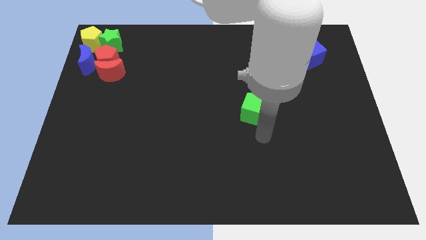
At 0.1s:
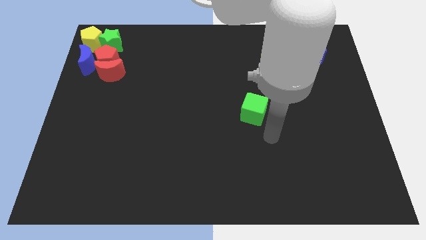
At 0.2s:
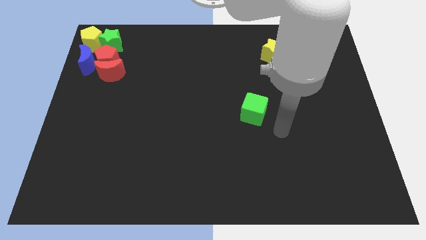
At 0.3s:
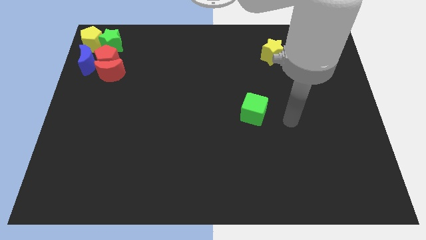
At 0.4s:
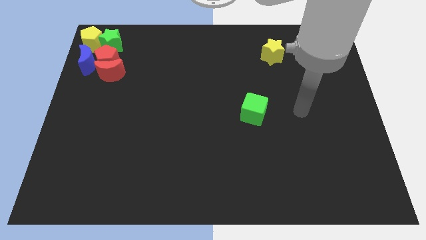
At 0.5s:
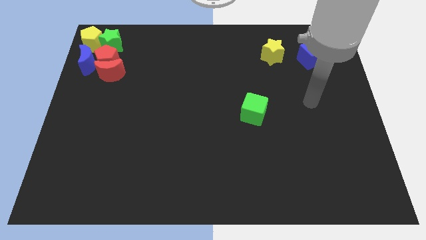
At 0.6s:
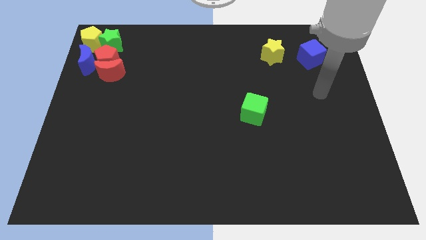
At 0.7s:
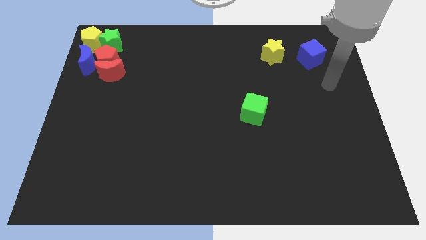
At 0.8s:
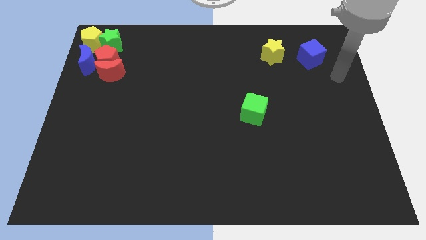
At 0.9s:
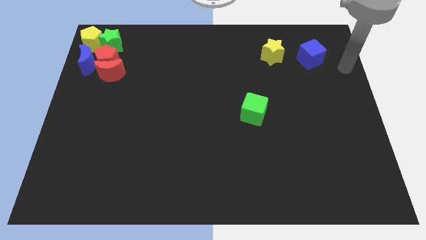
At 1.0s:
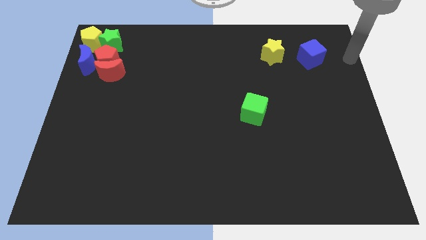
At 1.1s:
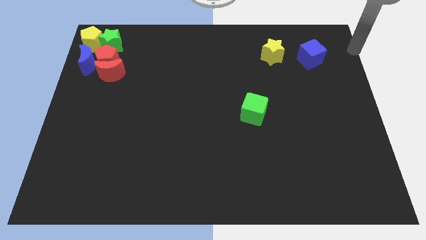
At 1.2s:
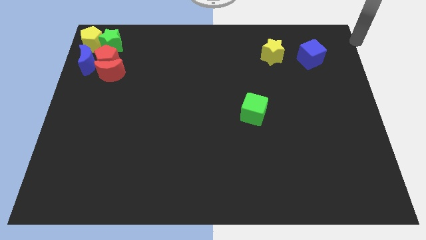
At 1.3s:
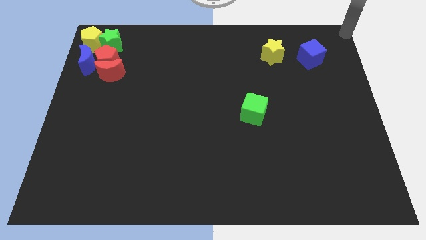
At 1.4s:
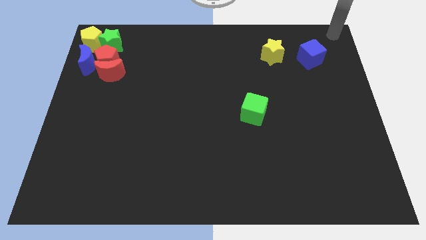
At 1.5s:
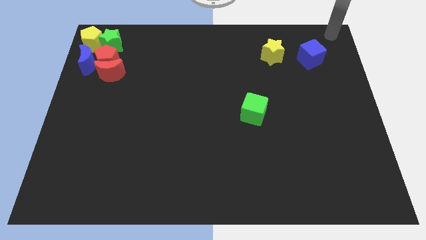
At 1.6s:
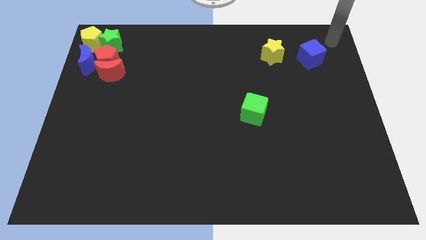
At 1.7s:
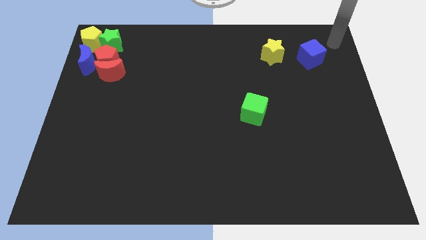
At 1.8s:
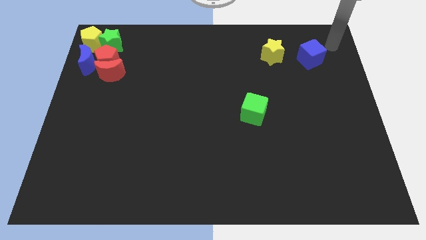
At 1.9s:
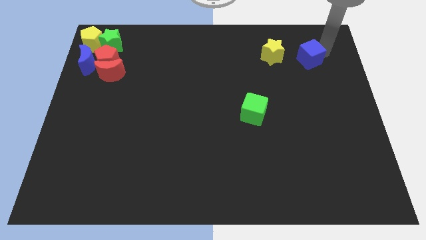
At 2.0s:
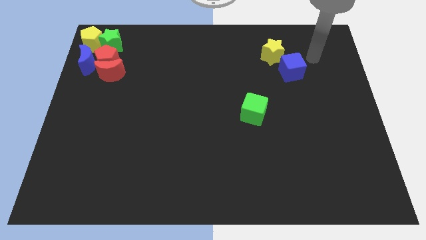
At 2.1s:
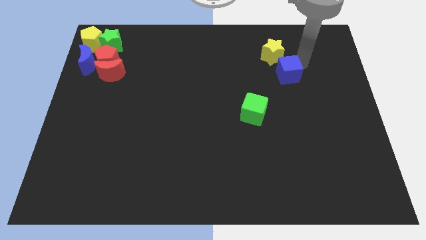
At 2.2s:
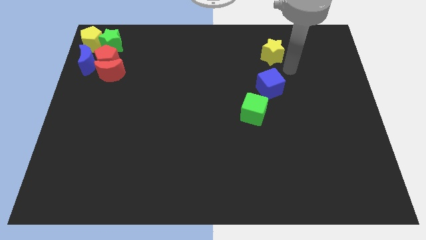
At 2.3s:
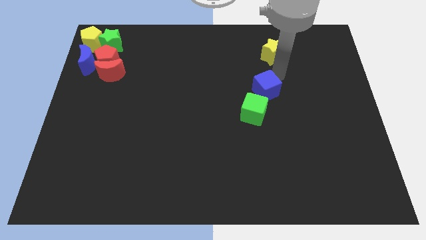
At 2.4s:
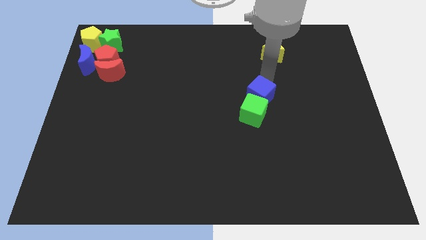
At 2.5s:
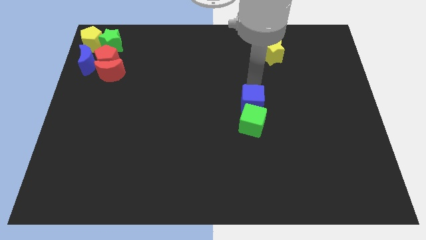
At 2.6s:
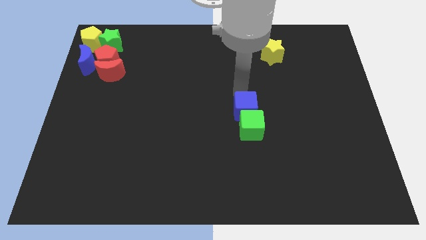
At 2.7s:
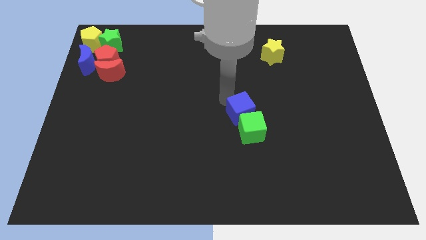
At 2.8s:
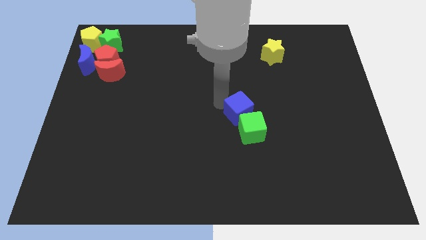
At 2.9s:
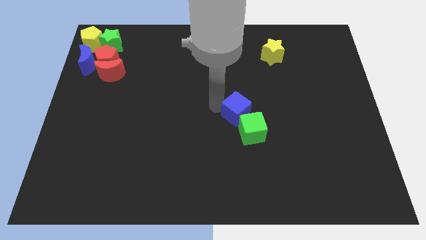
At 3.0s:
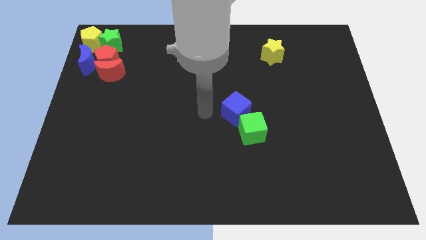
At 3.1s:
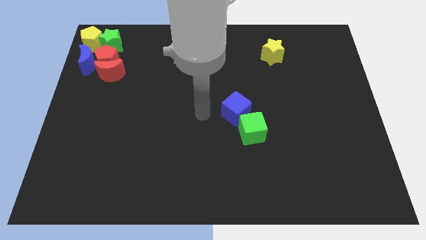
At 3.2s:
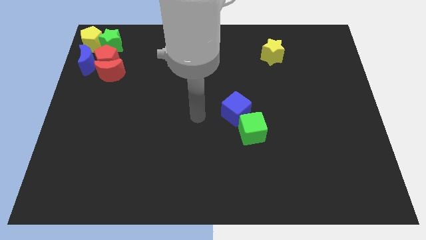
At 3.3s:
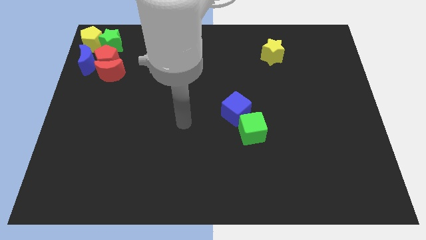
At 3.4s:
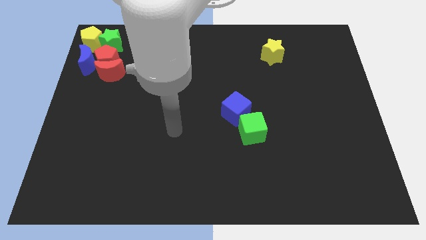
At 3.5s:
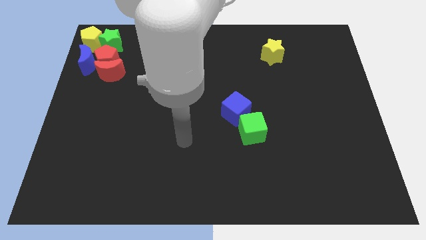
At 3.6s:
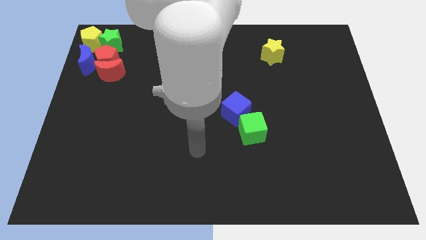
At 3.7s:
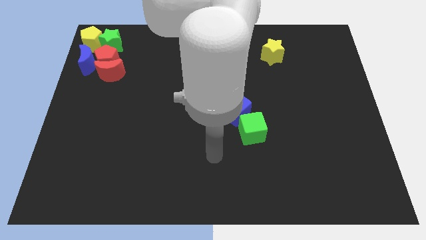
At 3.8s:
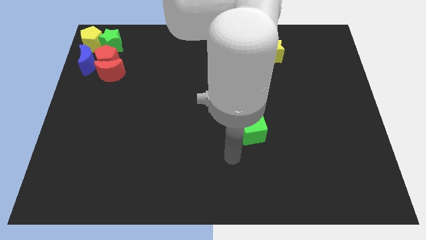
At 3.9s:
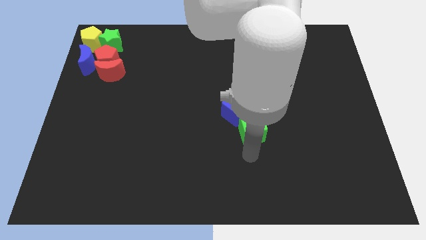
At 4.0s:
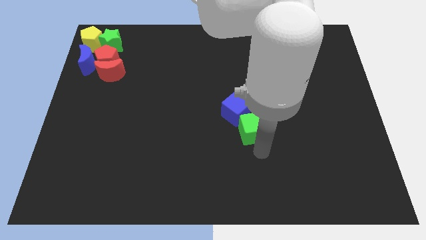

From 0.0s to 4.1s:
place the blue cube above the green cube

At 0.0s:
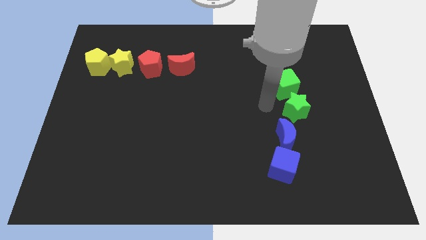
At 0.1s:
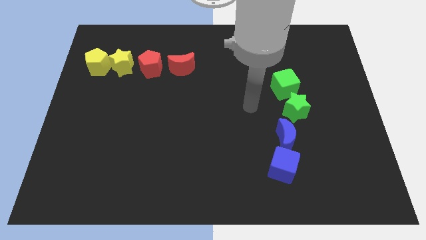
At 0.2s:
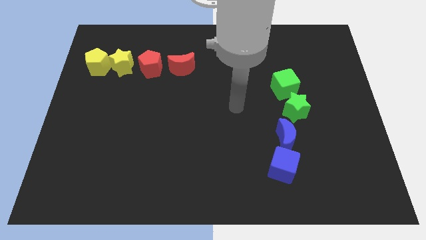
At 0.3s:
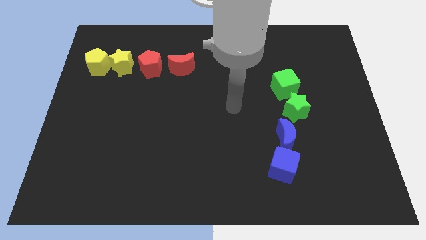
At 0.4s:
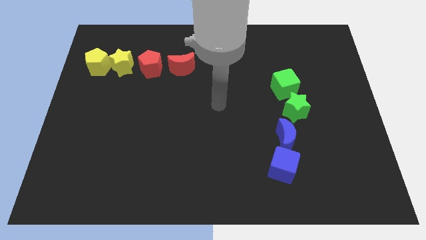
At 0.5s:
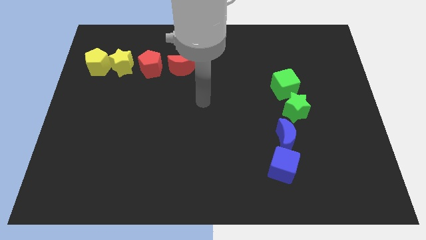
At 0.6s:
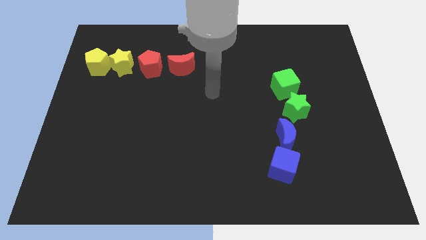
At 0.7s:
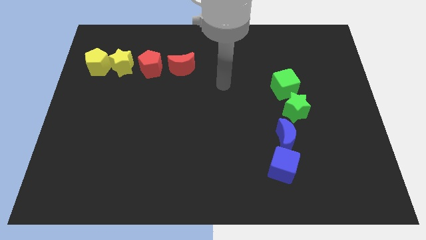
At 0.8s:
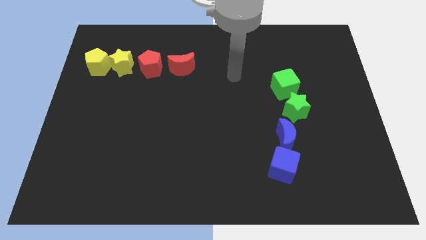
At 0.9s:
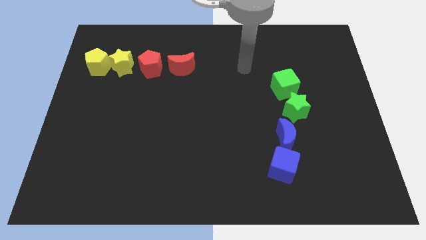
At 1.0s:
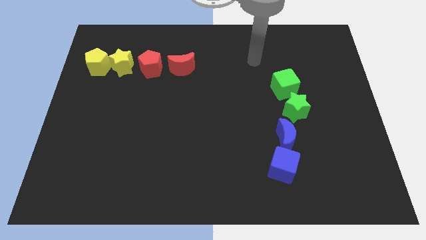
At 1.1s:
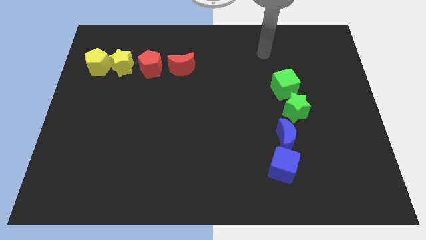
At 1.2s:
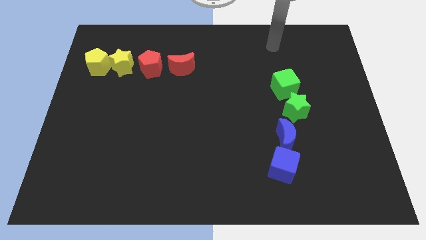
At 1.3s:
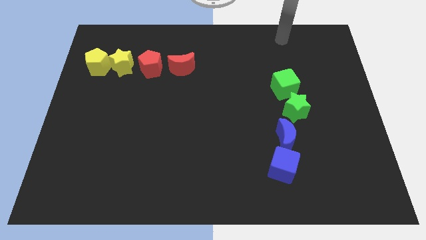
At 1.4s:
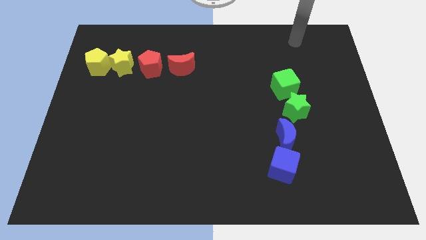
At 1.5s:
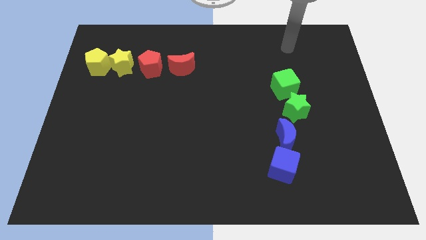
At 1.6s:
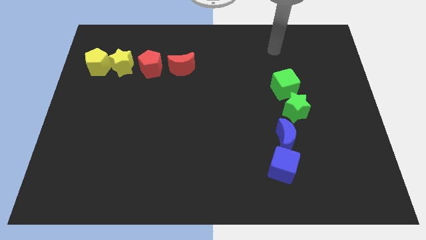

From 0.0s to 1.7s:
move away from the green star

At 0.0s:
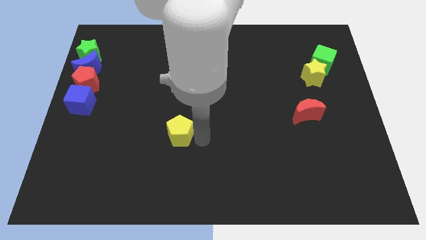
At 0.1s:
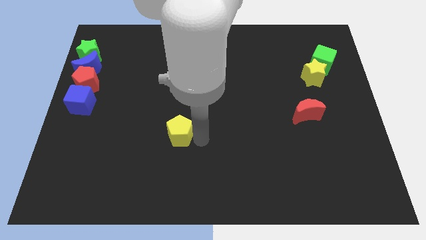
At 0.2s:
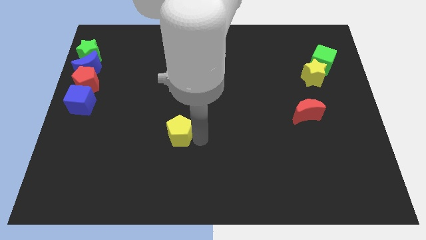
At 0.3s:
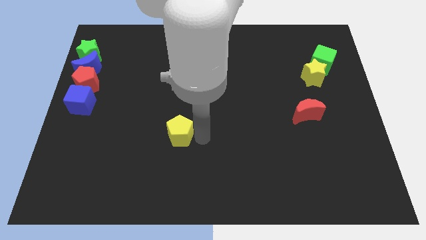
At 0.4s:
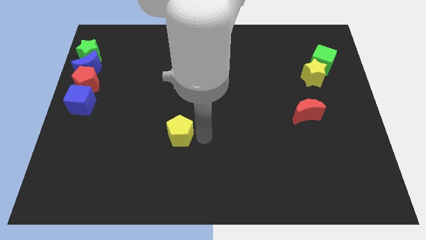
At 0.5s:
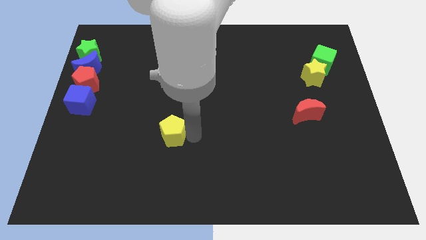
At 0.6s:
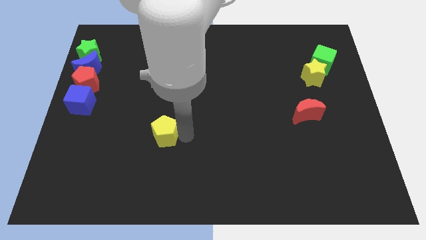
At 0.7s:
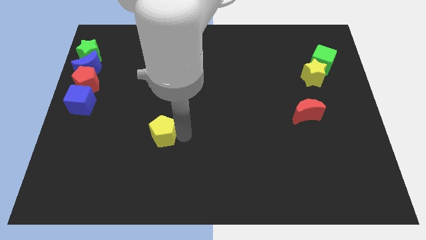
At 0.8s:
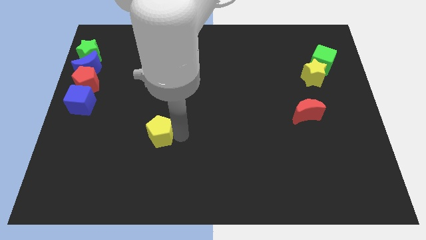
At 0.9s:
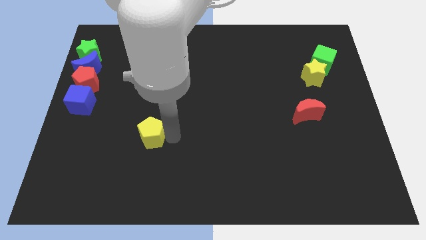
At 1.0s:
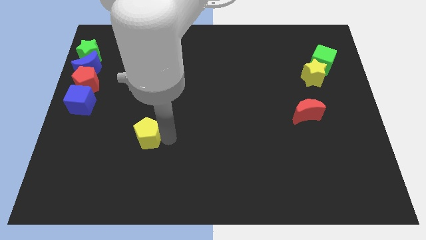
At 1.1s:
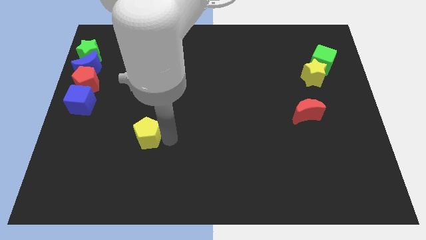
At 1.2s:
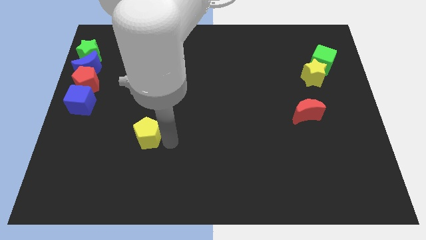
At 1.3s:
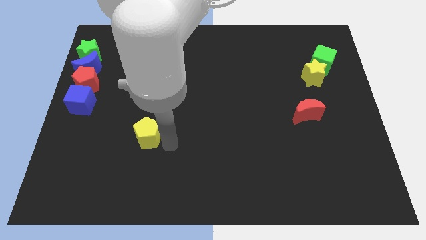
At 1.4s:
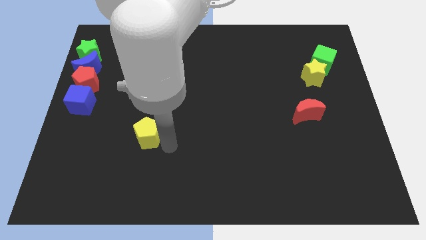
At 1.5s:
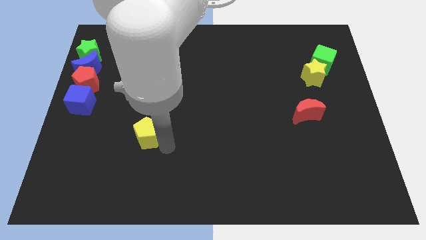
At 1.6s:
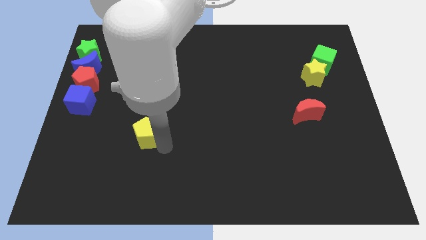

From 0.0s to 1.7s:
push the yellow pentagon slightly to the left

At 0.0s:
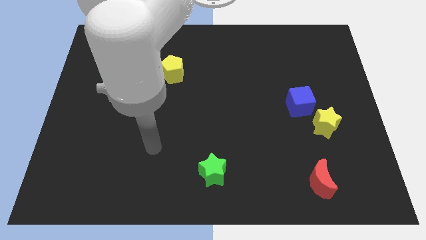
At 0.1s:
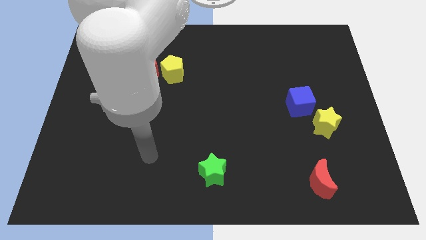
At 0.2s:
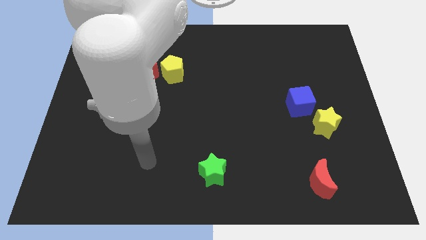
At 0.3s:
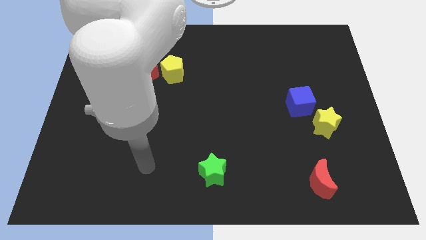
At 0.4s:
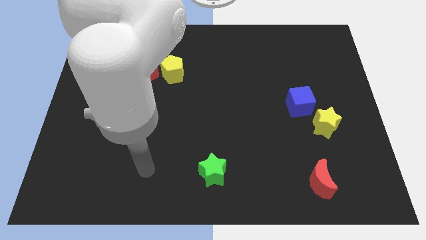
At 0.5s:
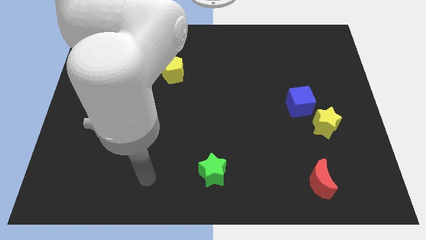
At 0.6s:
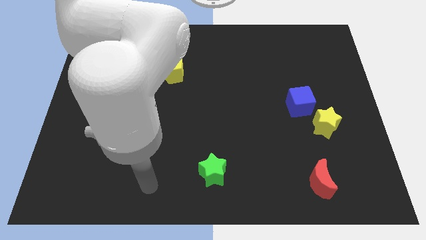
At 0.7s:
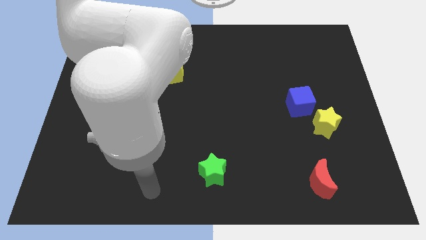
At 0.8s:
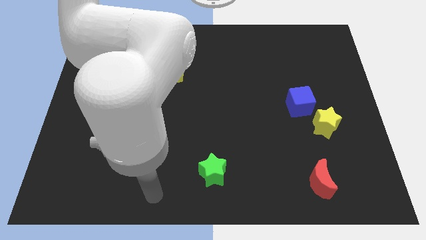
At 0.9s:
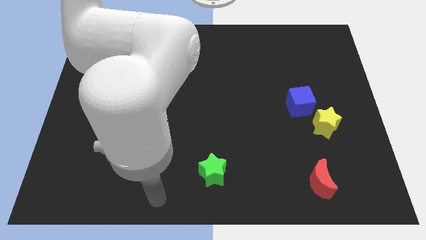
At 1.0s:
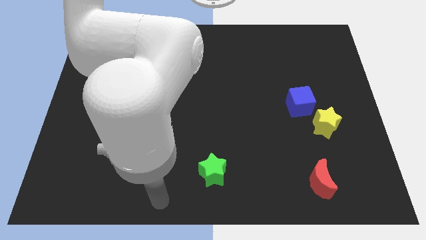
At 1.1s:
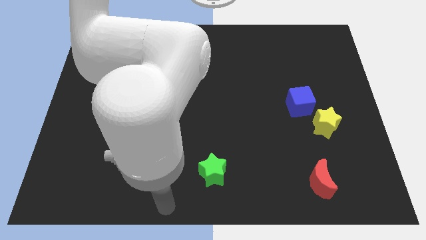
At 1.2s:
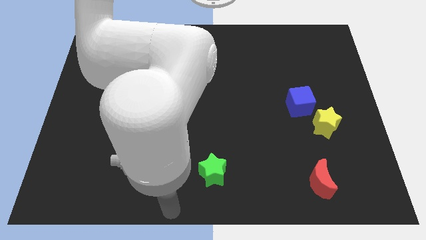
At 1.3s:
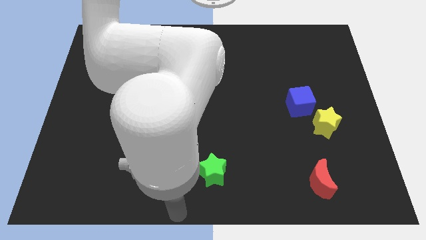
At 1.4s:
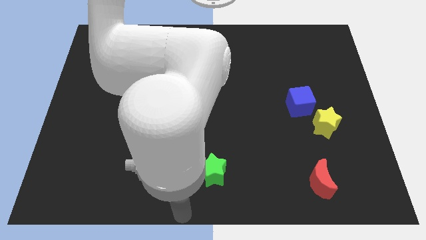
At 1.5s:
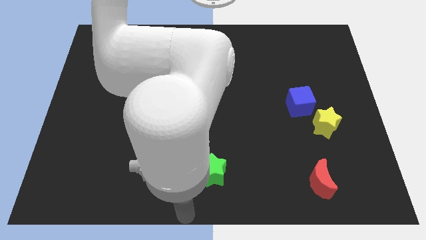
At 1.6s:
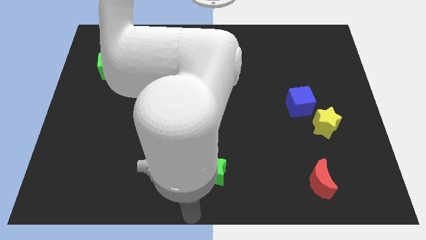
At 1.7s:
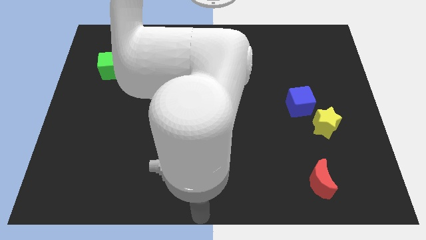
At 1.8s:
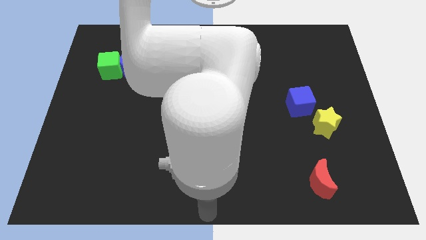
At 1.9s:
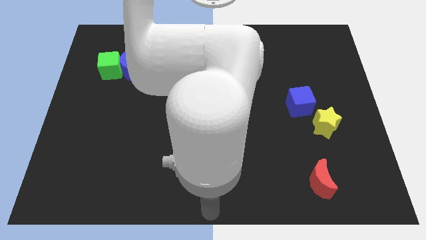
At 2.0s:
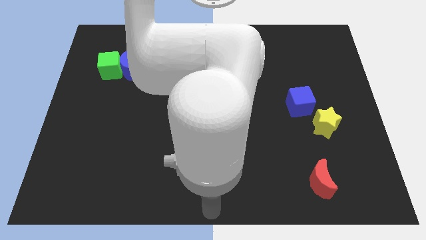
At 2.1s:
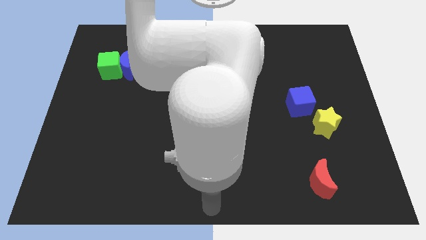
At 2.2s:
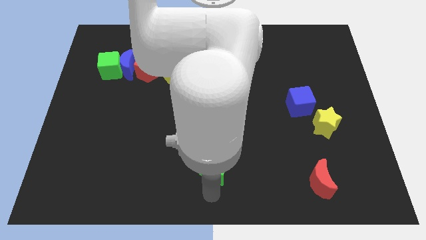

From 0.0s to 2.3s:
move the arm to the bottom center of the board
